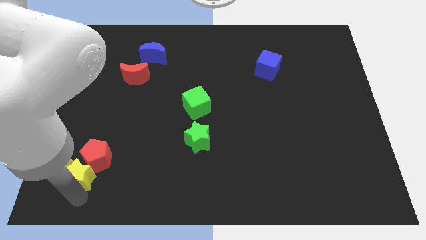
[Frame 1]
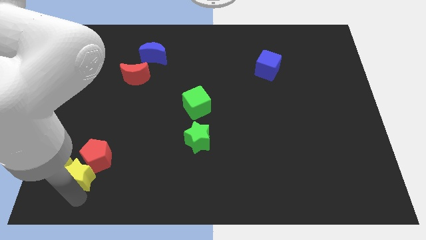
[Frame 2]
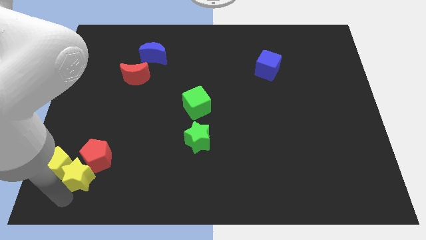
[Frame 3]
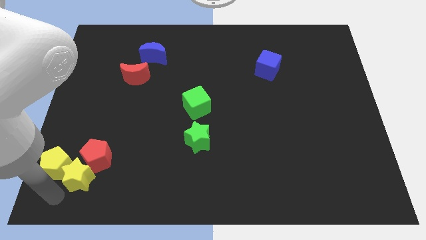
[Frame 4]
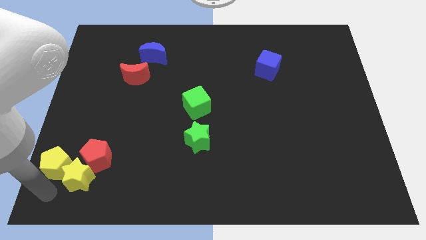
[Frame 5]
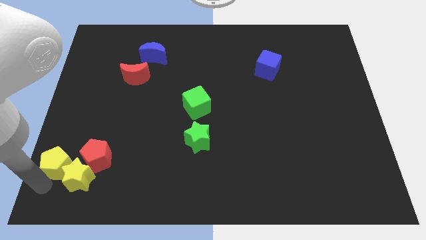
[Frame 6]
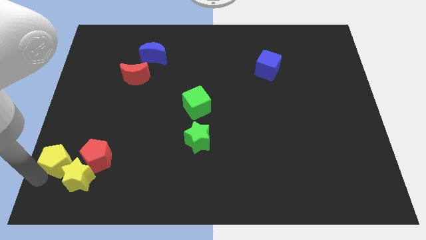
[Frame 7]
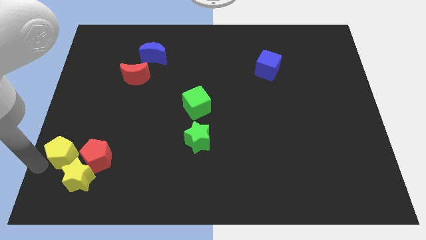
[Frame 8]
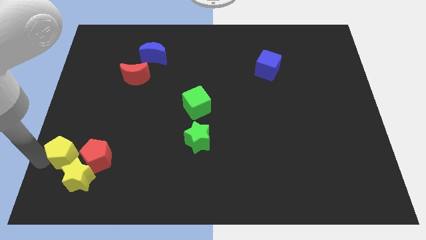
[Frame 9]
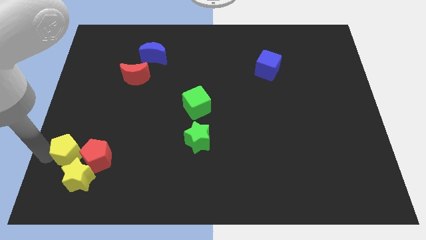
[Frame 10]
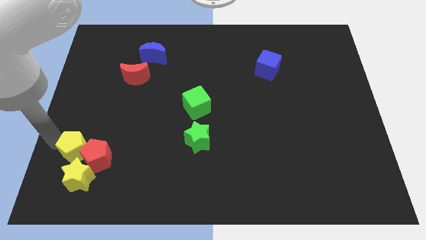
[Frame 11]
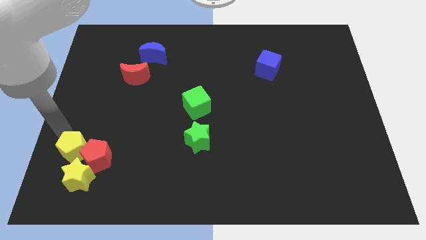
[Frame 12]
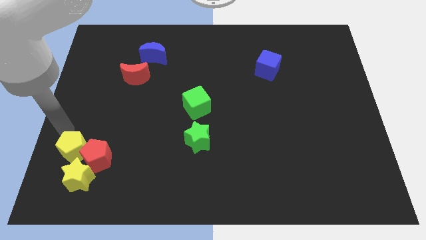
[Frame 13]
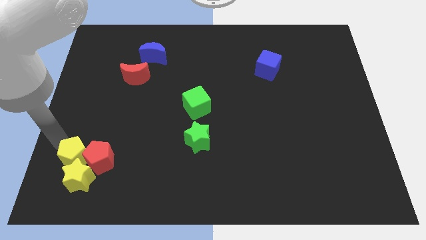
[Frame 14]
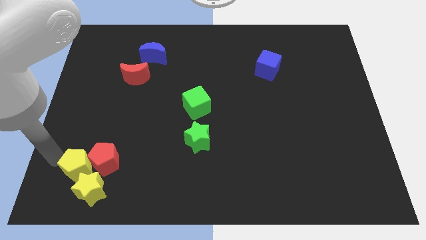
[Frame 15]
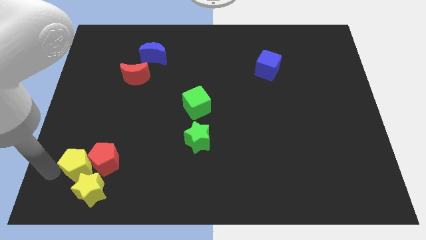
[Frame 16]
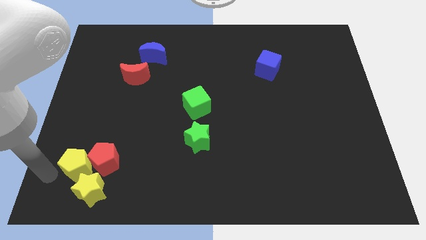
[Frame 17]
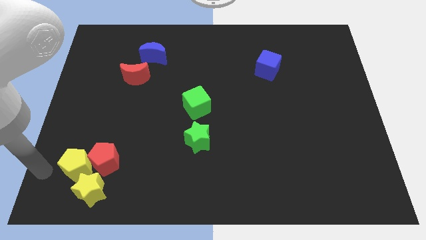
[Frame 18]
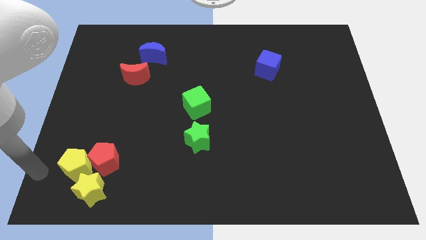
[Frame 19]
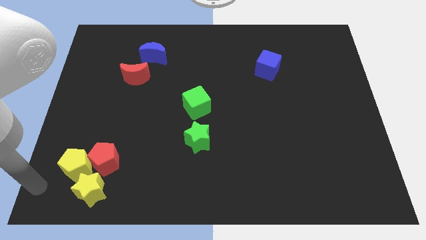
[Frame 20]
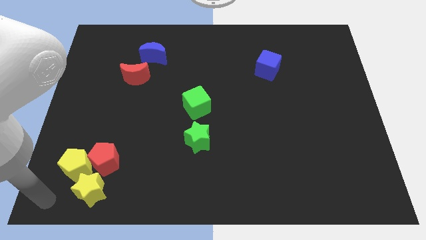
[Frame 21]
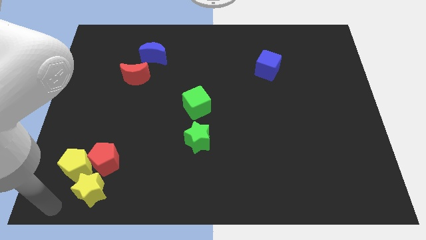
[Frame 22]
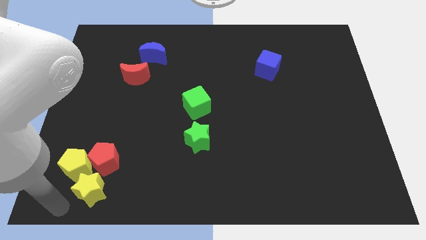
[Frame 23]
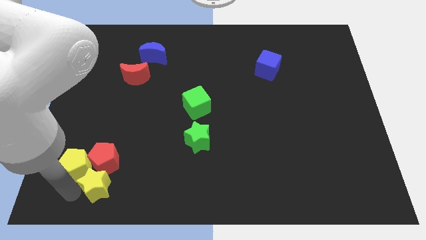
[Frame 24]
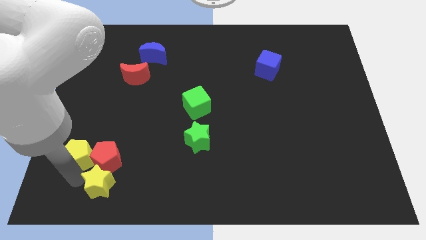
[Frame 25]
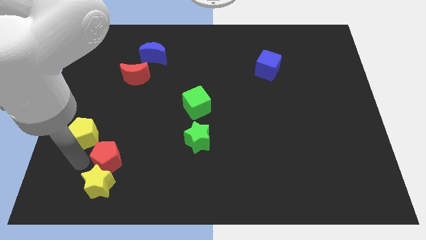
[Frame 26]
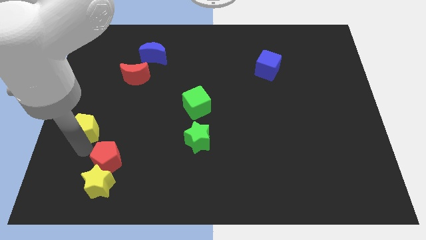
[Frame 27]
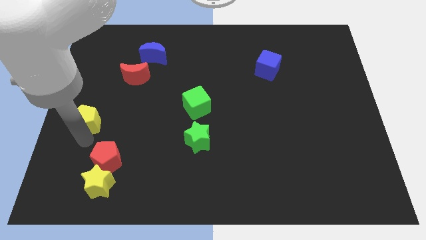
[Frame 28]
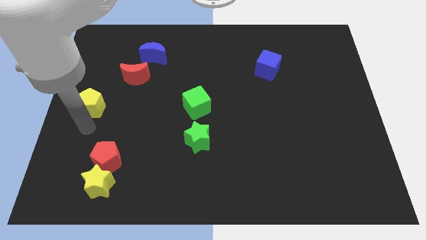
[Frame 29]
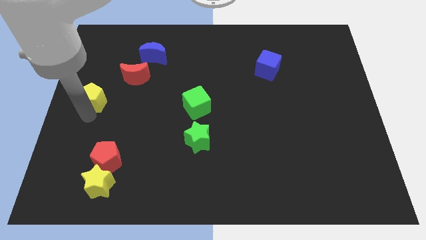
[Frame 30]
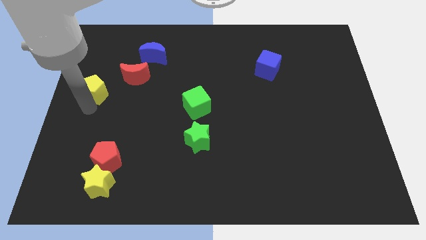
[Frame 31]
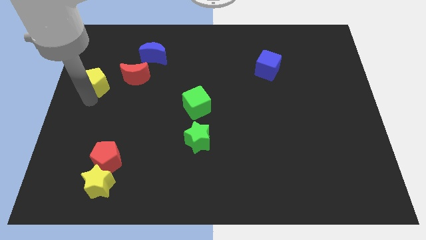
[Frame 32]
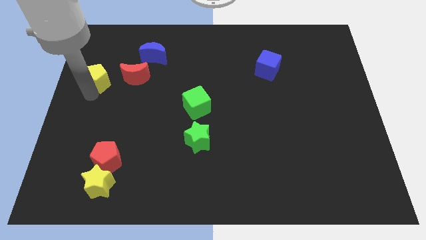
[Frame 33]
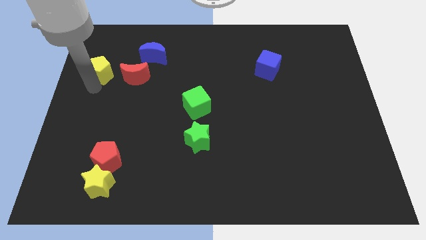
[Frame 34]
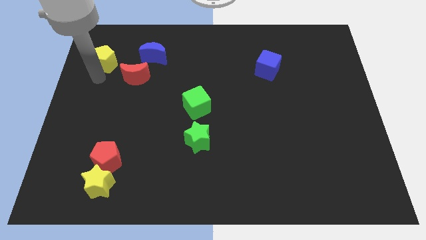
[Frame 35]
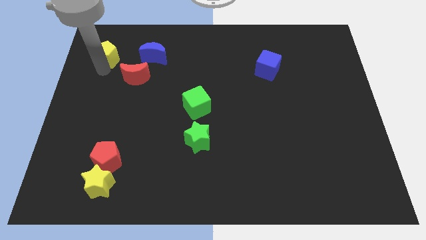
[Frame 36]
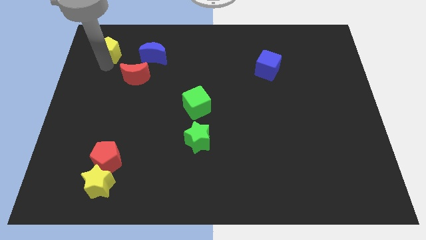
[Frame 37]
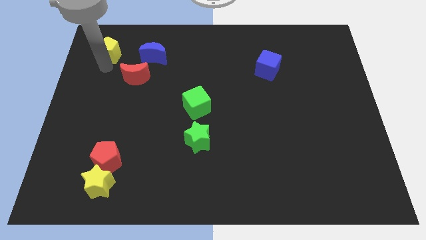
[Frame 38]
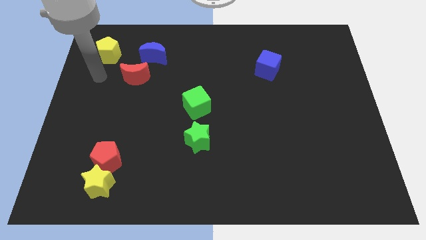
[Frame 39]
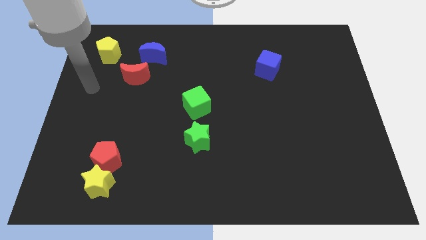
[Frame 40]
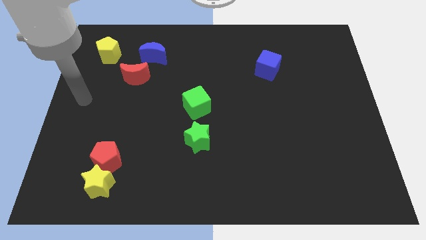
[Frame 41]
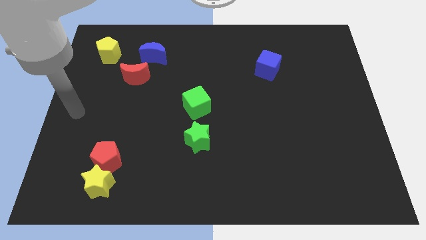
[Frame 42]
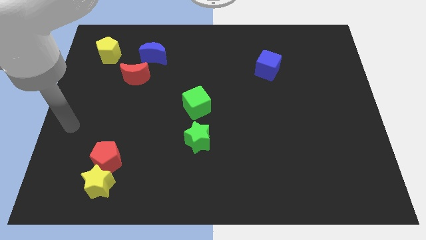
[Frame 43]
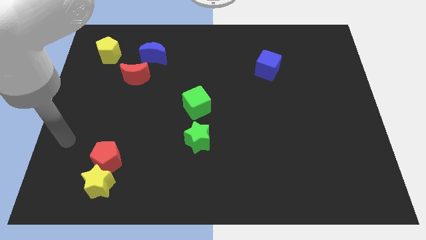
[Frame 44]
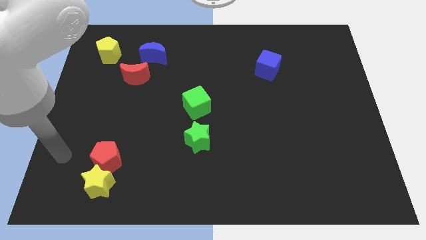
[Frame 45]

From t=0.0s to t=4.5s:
place the yellow pentagon to the left of the blue moon

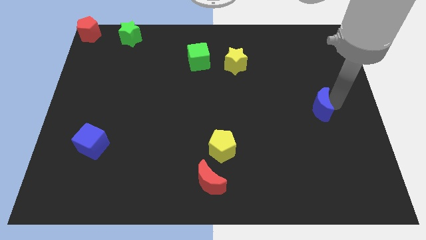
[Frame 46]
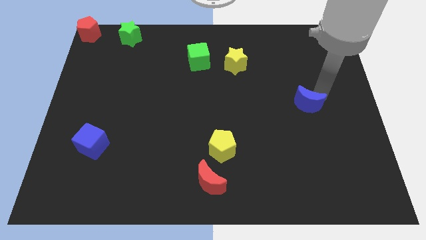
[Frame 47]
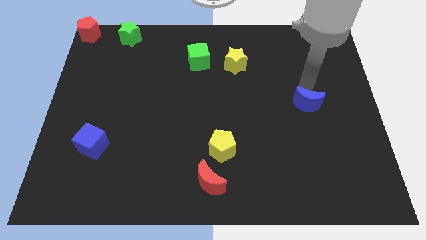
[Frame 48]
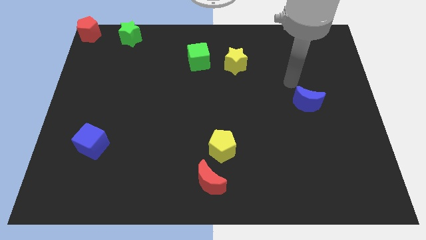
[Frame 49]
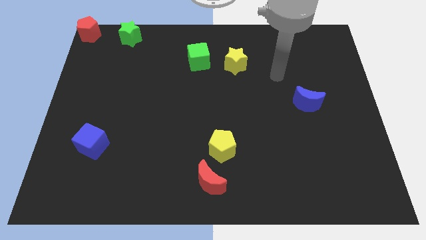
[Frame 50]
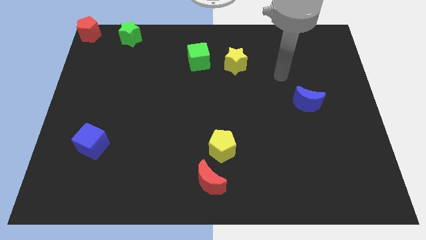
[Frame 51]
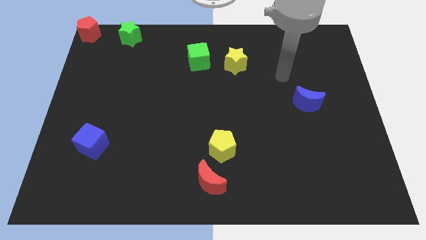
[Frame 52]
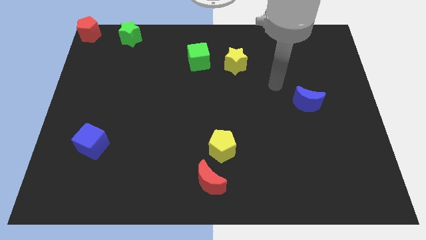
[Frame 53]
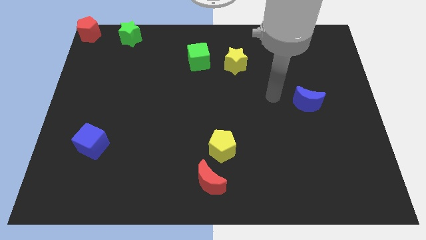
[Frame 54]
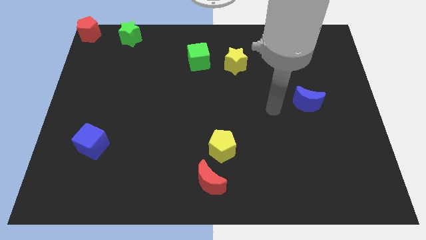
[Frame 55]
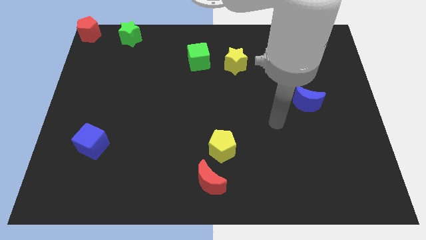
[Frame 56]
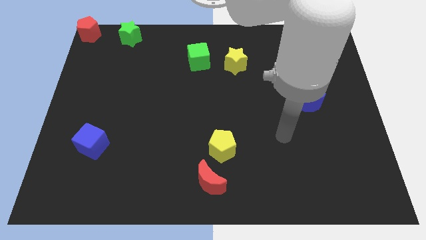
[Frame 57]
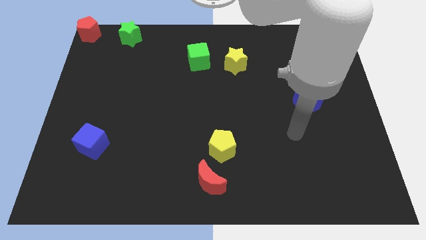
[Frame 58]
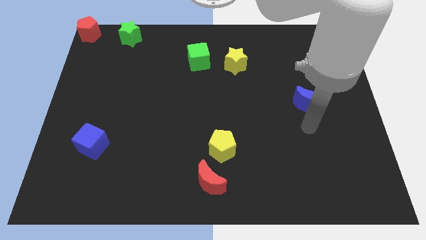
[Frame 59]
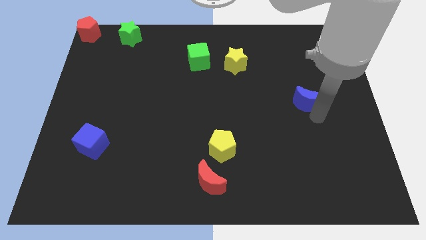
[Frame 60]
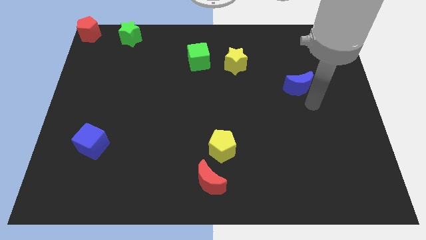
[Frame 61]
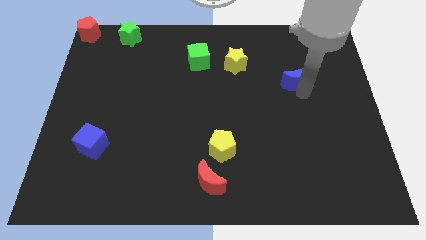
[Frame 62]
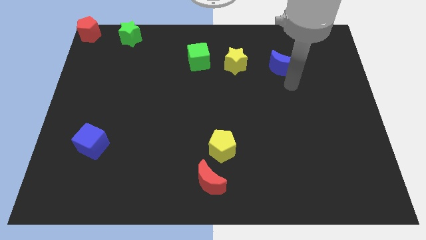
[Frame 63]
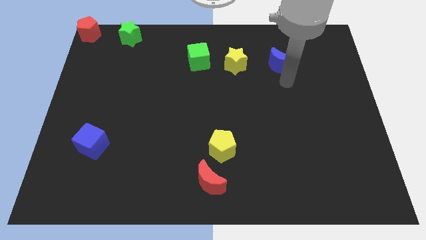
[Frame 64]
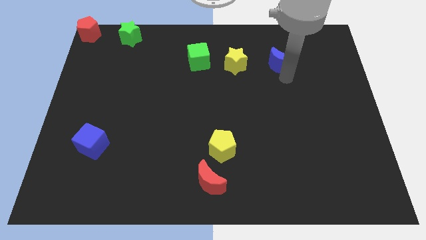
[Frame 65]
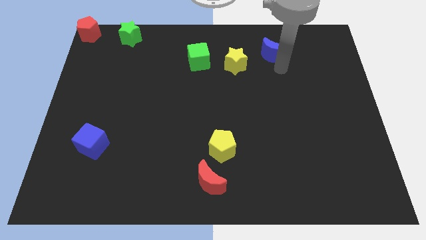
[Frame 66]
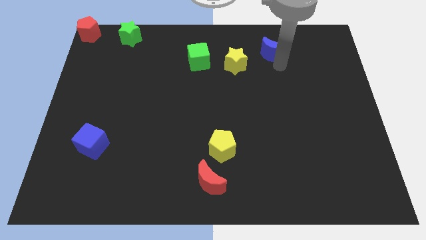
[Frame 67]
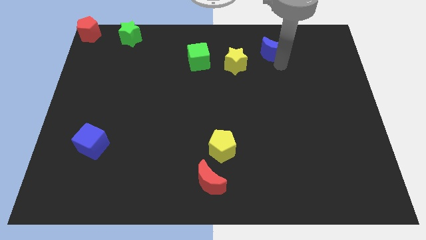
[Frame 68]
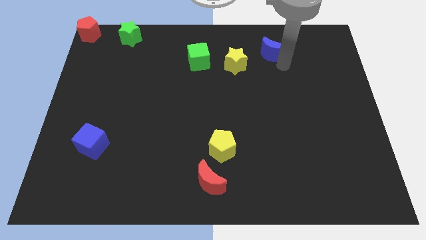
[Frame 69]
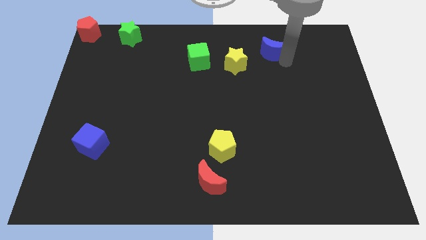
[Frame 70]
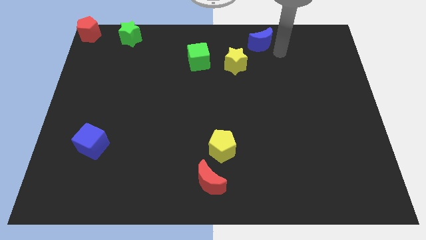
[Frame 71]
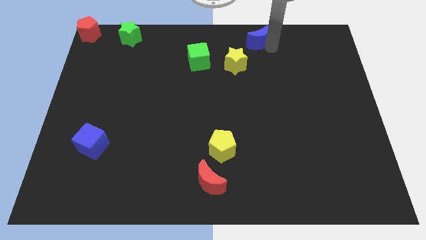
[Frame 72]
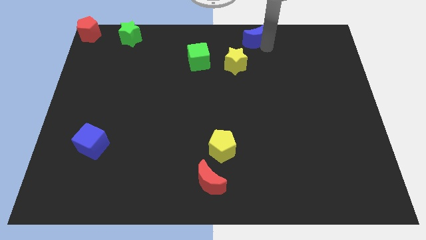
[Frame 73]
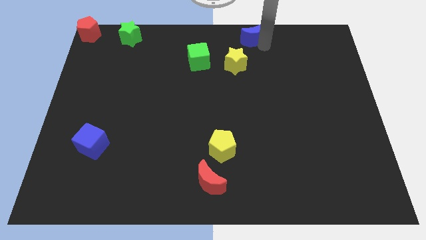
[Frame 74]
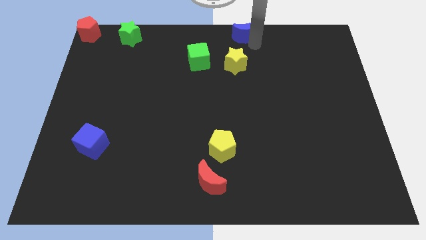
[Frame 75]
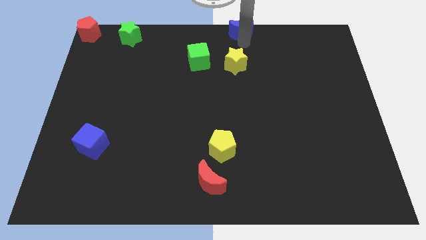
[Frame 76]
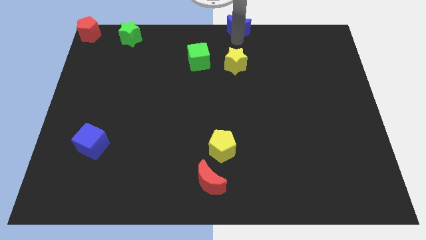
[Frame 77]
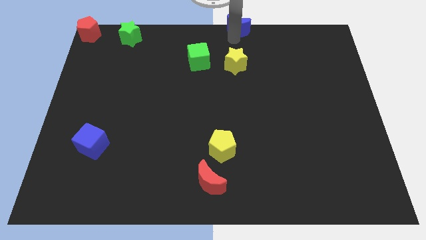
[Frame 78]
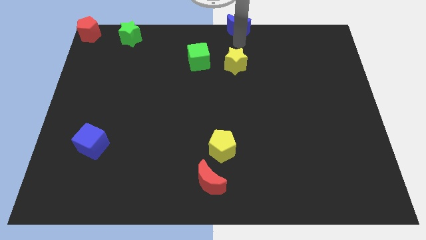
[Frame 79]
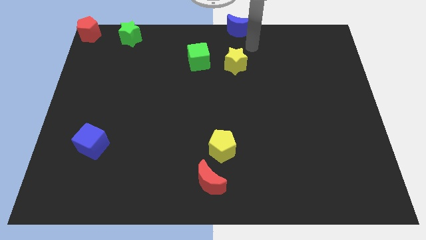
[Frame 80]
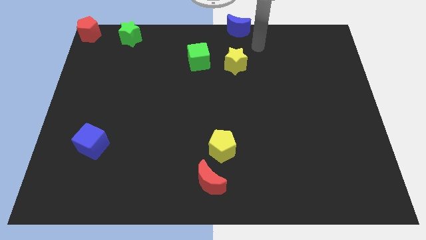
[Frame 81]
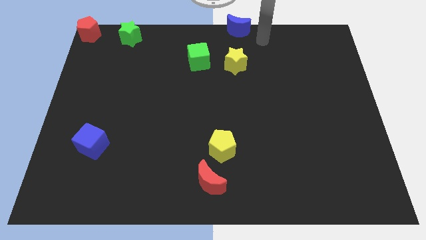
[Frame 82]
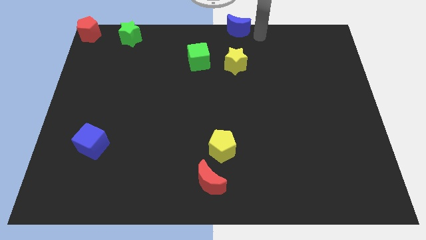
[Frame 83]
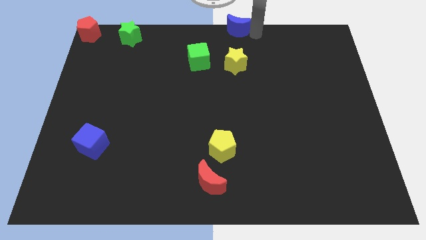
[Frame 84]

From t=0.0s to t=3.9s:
put the blue crescent vertically above the yellow star

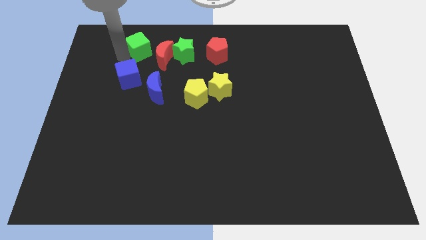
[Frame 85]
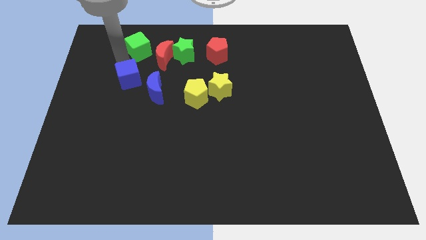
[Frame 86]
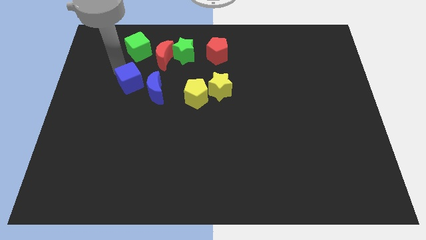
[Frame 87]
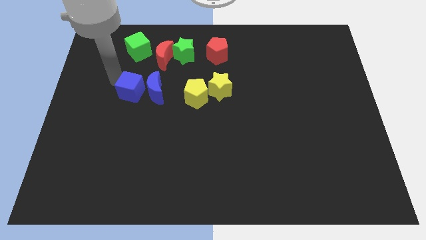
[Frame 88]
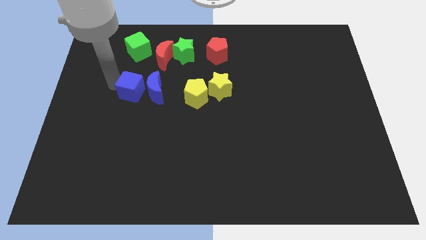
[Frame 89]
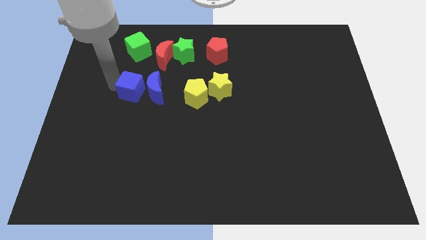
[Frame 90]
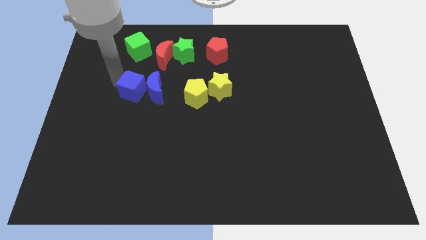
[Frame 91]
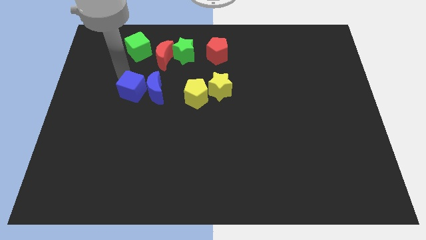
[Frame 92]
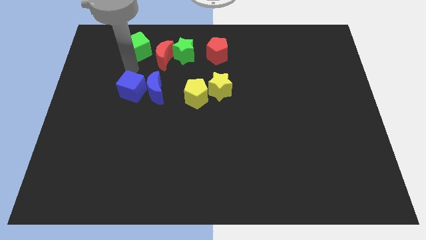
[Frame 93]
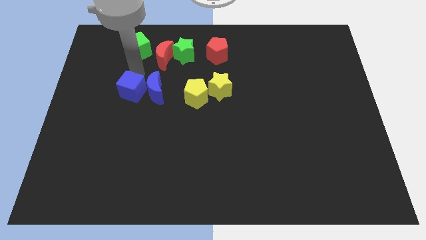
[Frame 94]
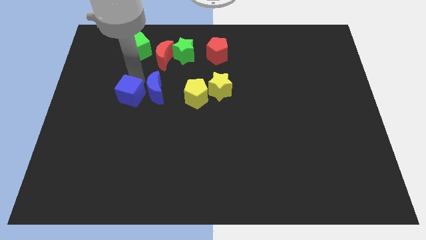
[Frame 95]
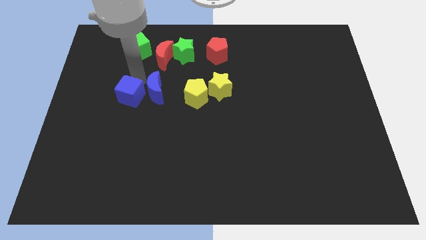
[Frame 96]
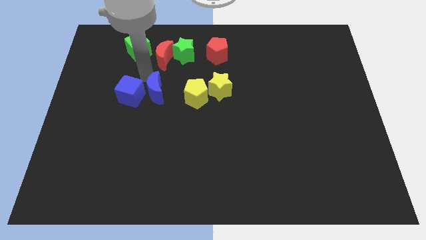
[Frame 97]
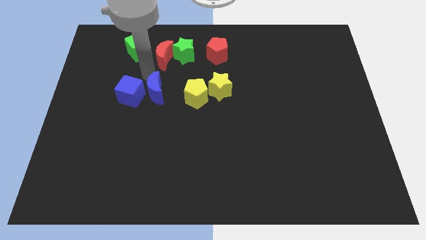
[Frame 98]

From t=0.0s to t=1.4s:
push the blue cube to the left side of the blue moon
